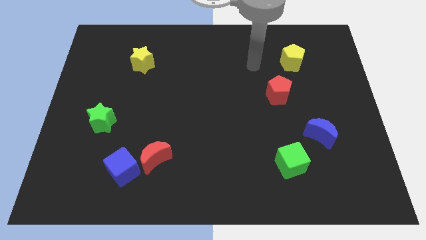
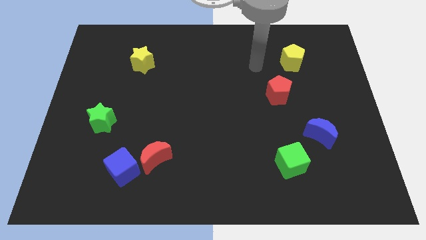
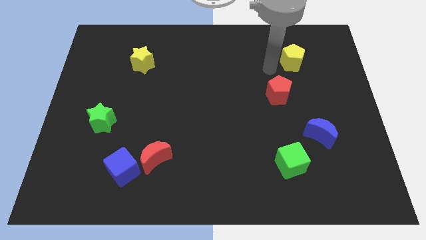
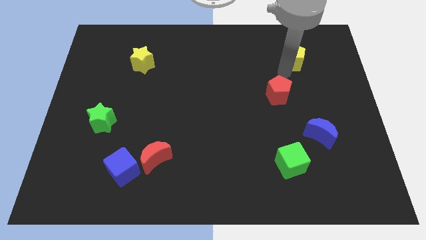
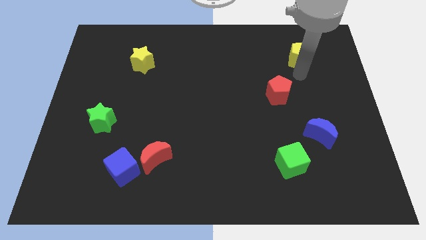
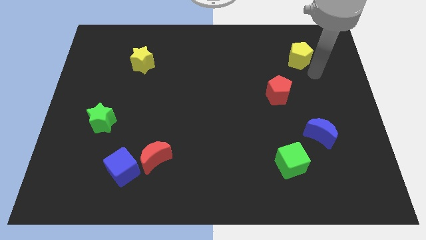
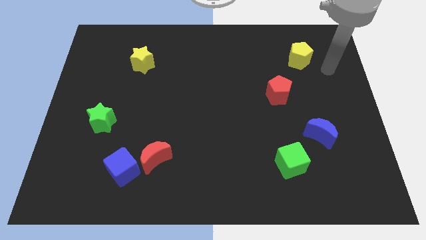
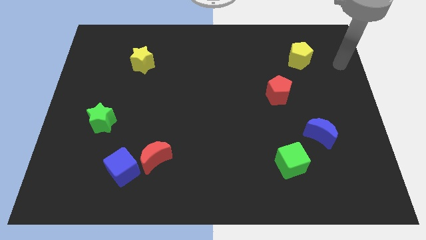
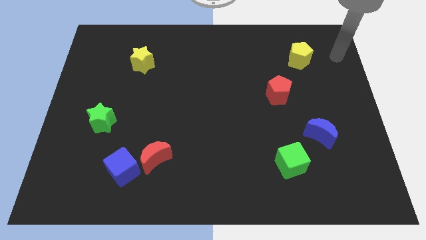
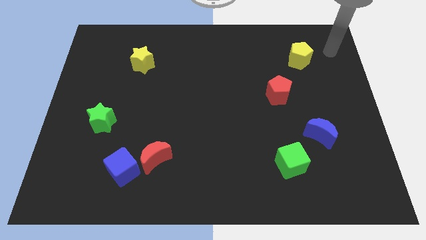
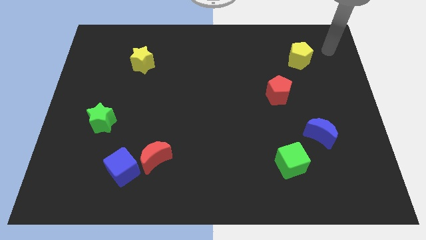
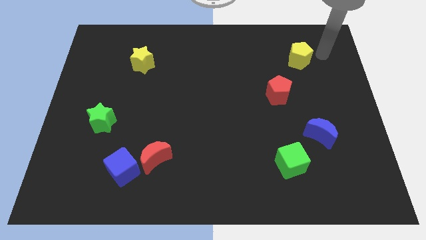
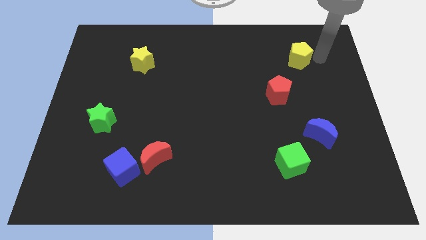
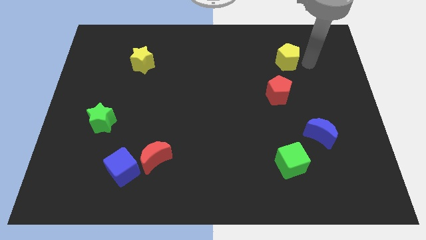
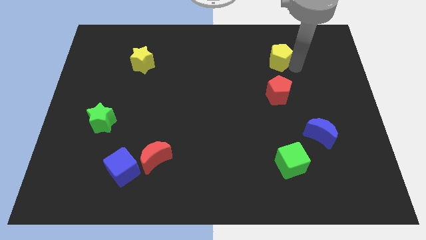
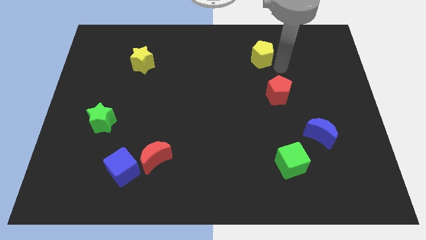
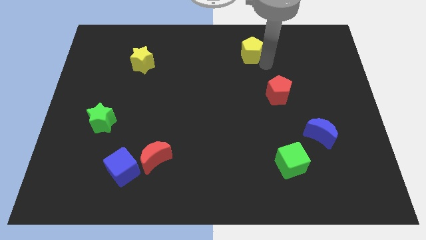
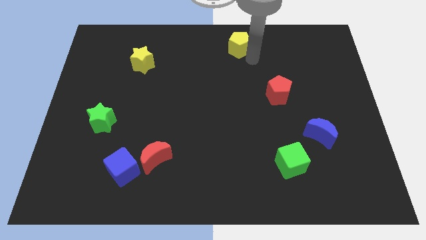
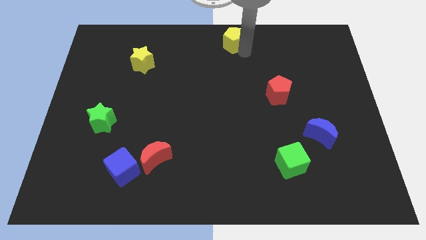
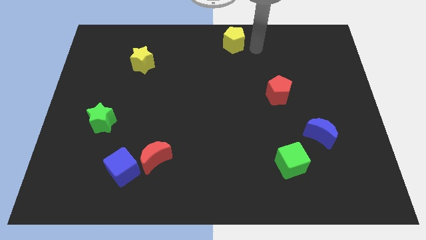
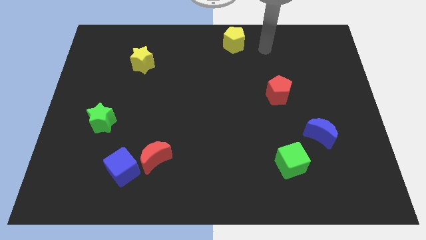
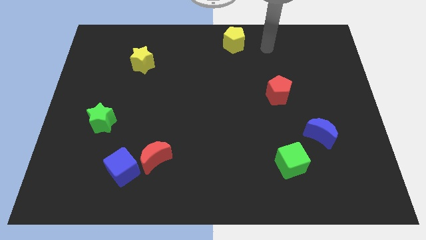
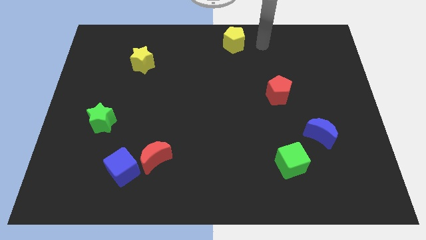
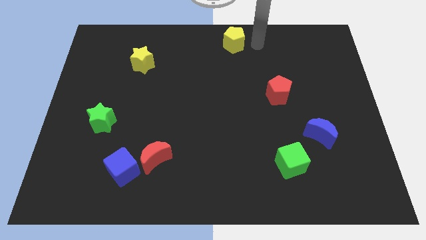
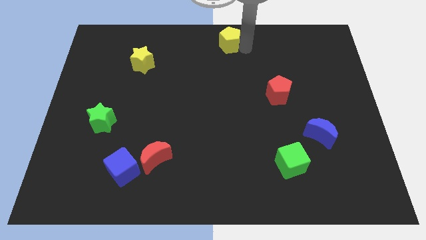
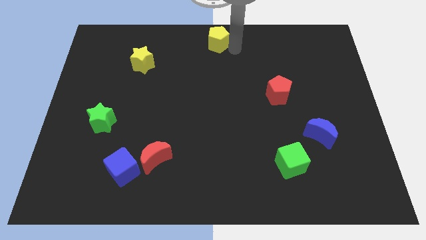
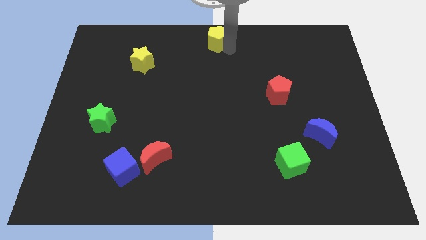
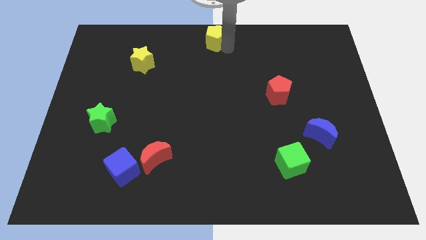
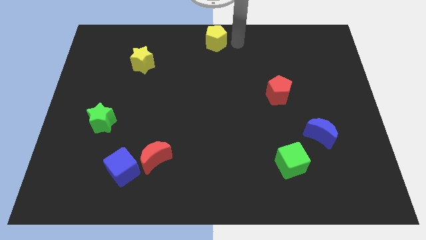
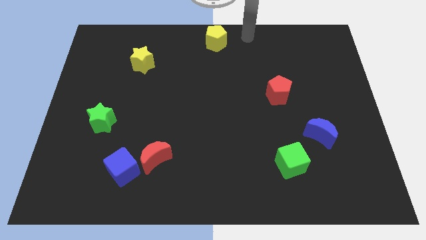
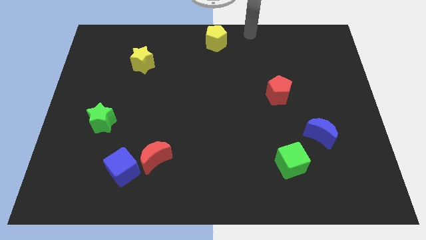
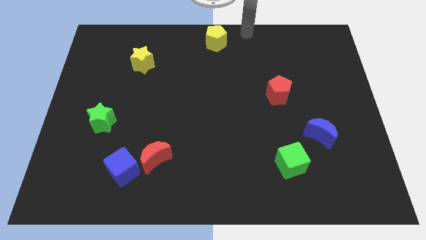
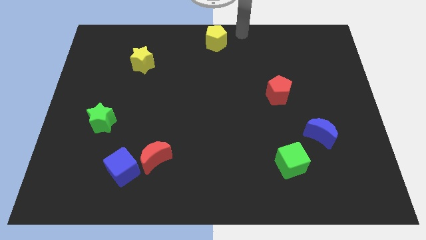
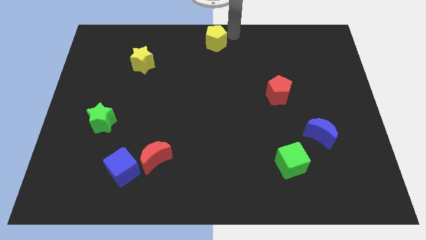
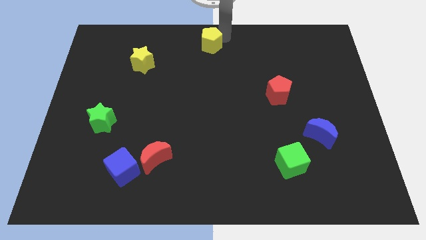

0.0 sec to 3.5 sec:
place the yellow pentagon diagonally top right to the yellow star

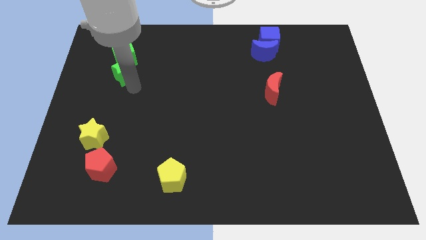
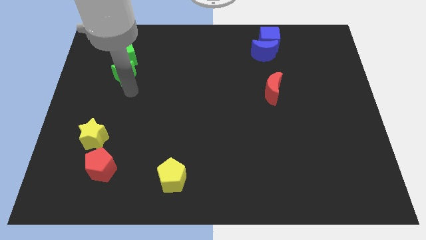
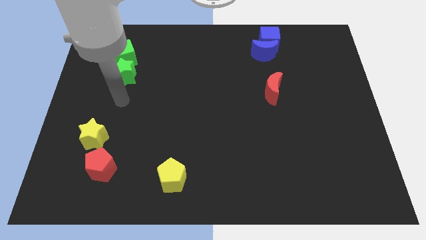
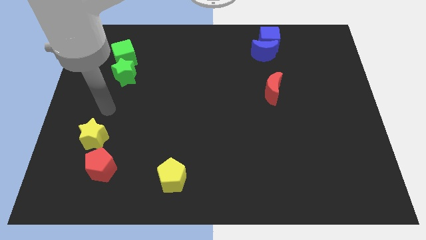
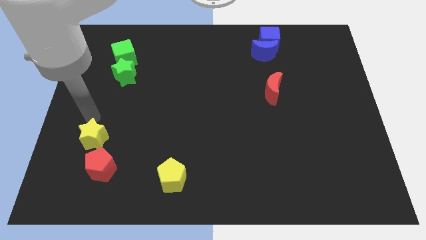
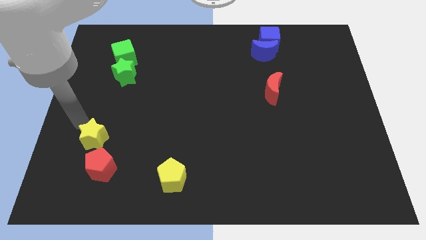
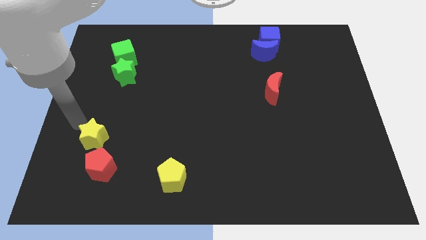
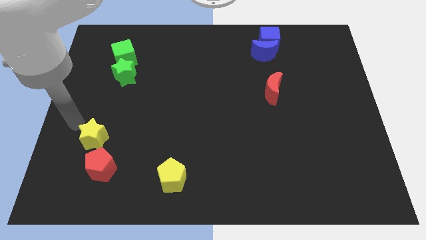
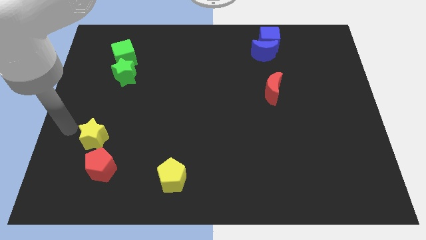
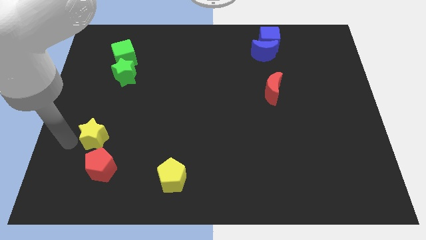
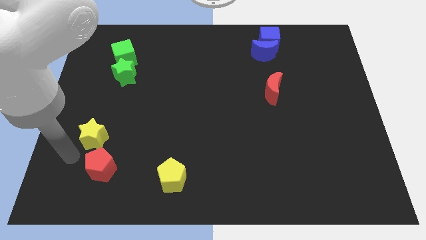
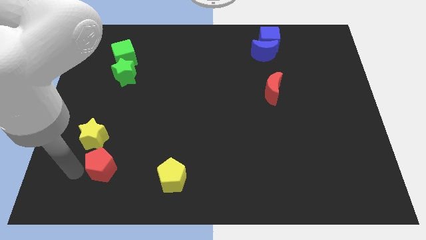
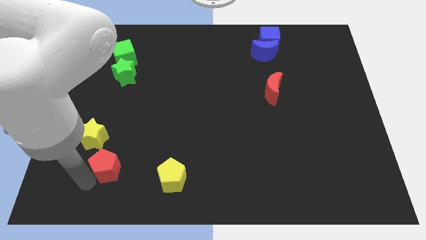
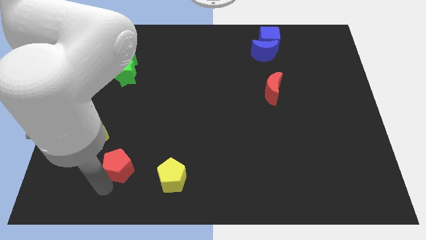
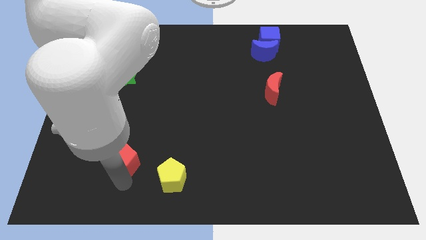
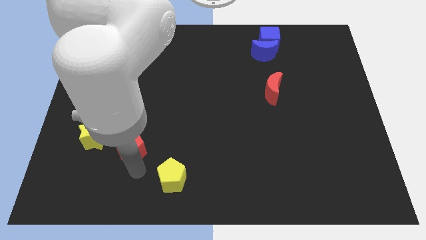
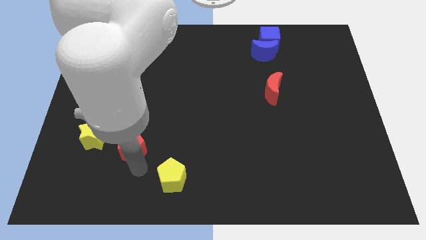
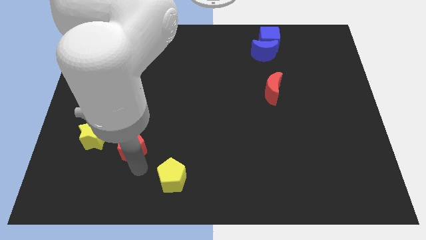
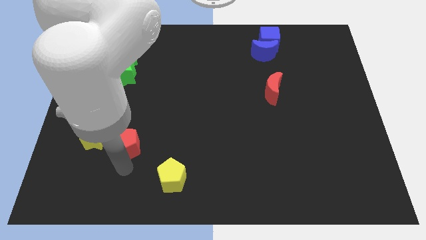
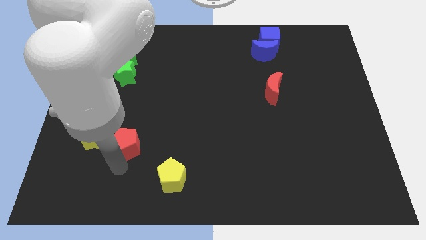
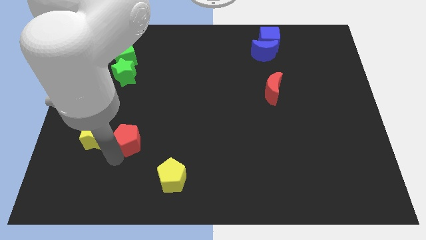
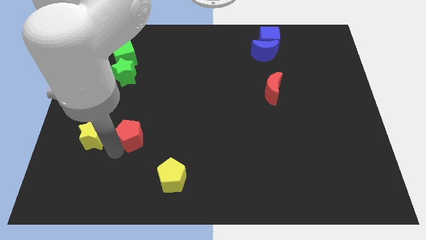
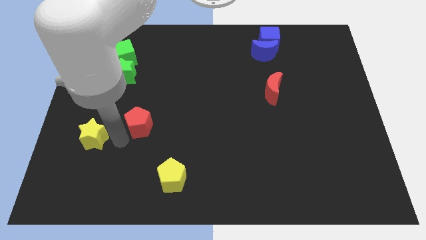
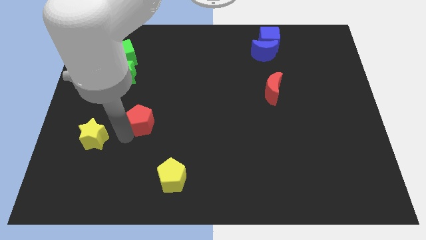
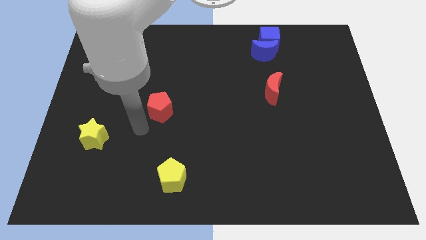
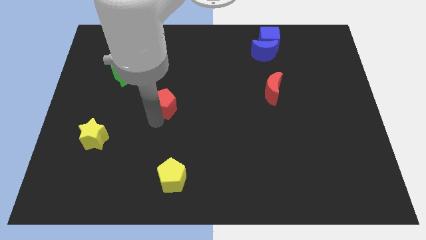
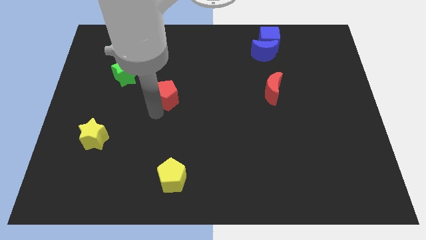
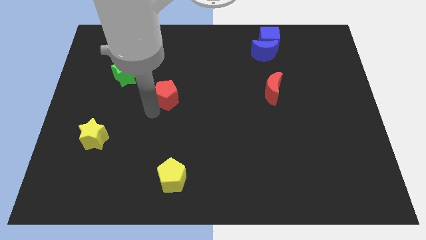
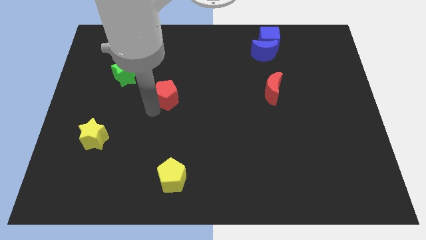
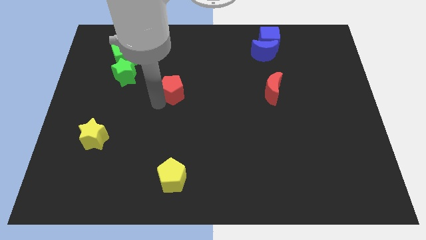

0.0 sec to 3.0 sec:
move the red pentagon parallel to the left side of the red crescent

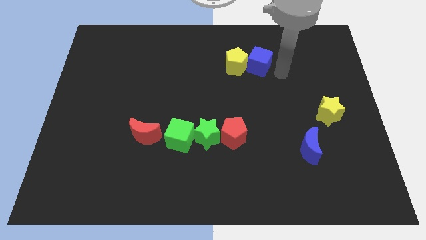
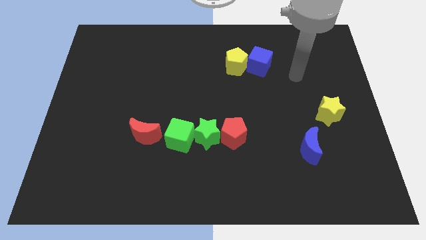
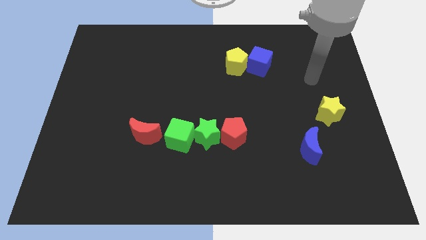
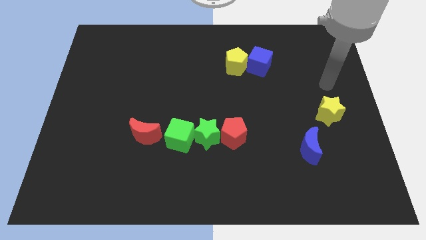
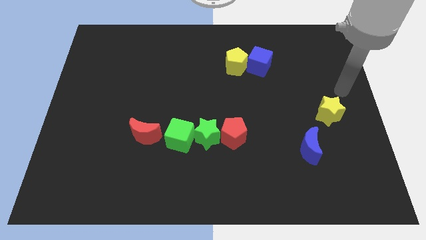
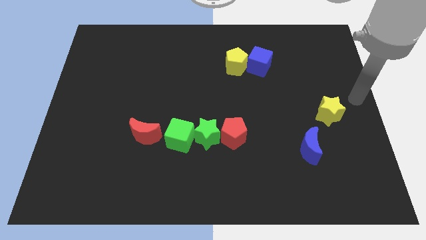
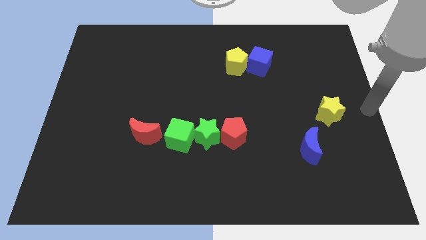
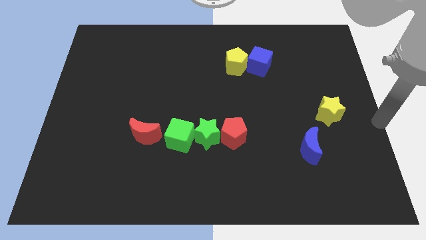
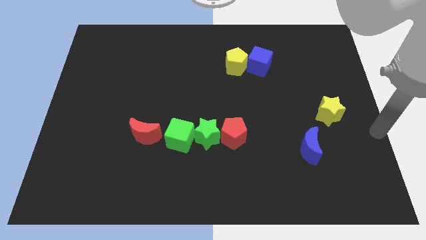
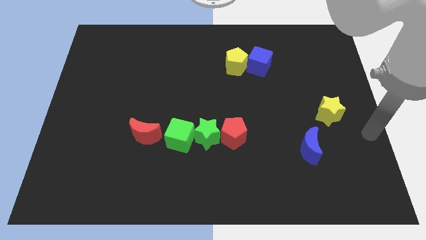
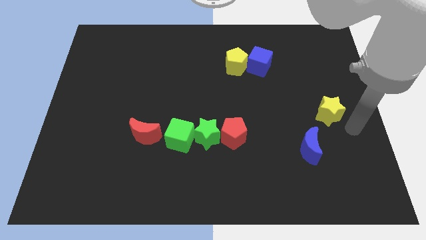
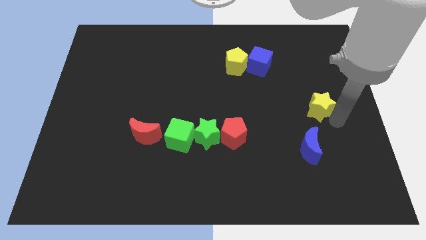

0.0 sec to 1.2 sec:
move the arm to the bottom of the yellow star

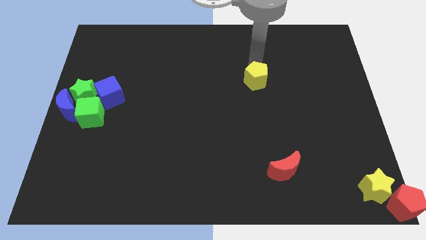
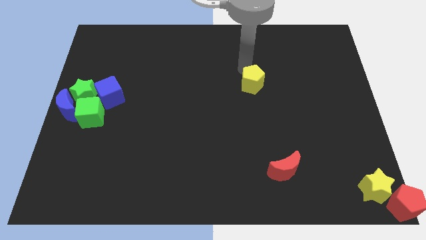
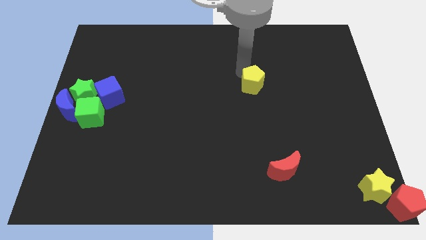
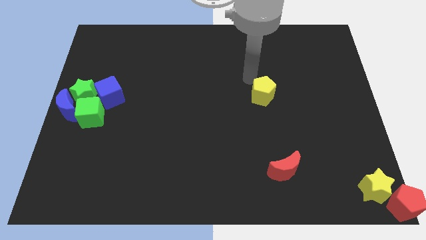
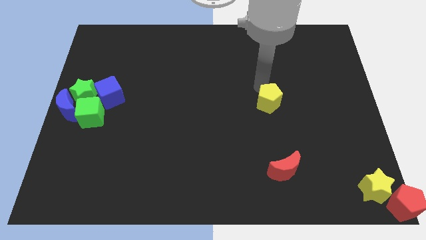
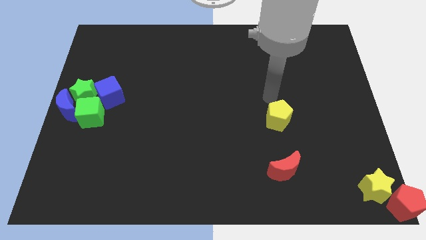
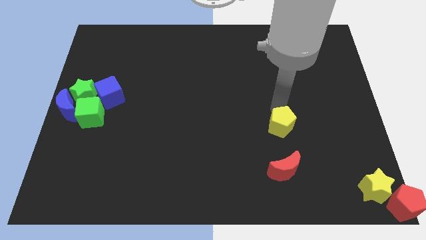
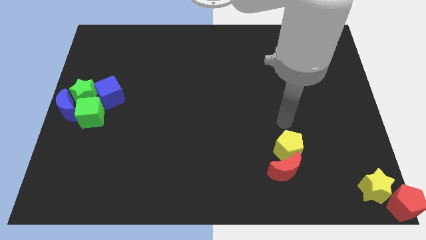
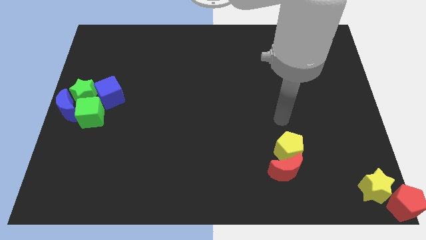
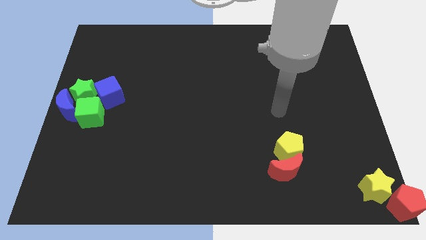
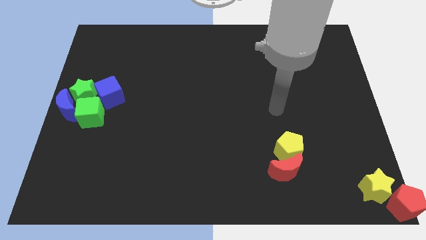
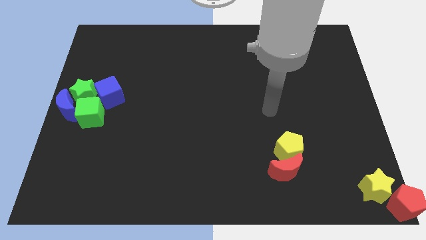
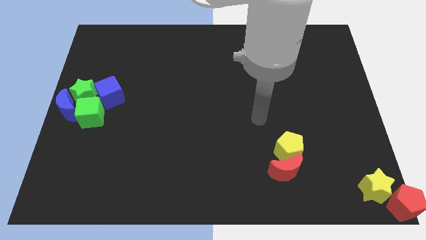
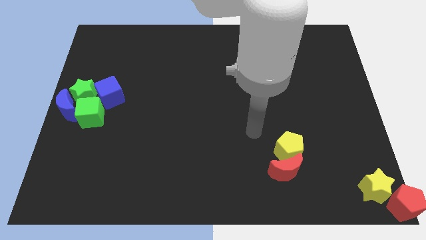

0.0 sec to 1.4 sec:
place the yellow pentagon at the top of the red moon
